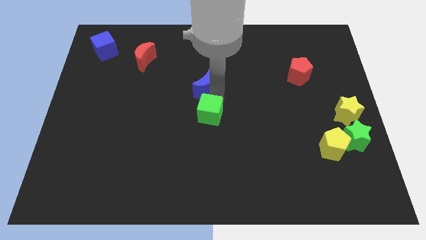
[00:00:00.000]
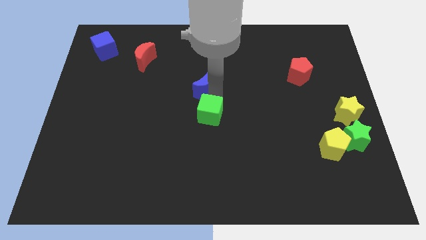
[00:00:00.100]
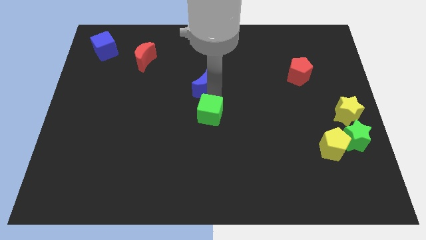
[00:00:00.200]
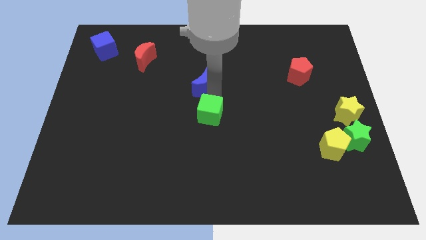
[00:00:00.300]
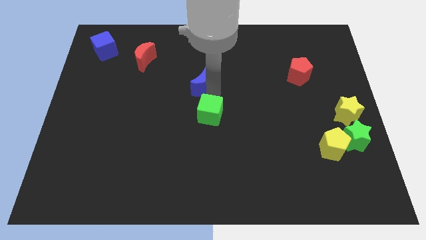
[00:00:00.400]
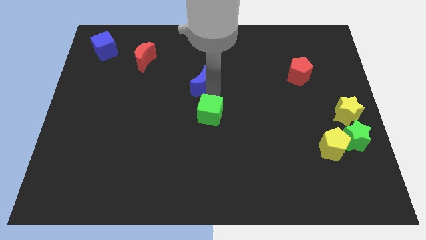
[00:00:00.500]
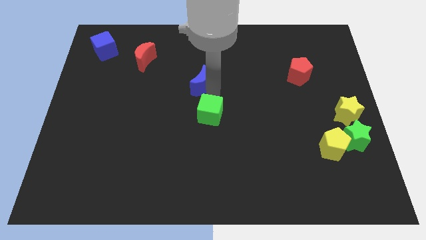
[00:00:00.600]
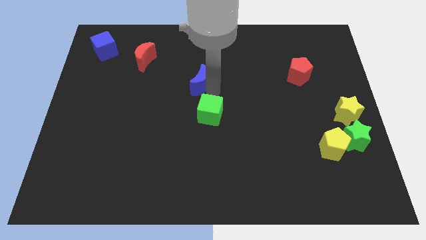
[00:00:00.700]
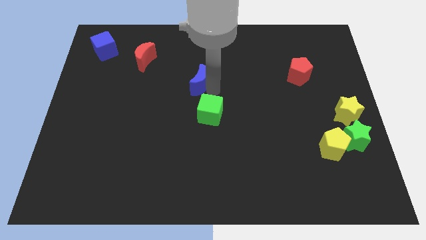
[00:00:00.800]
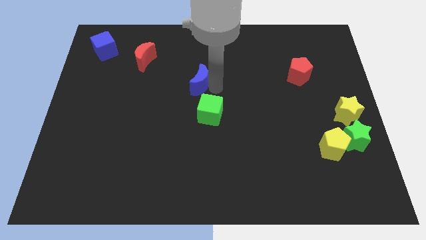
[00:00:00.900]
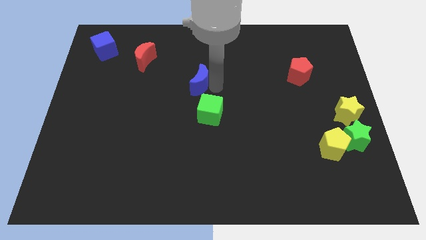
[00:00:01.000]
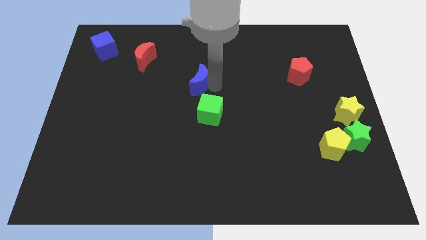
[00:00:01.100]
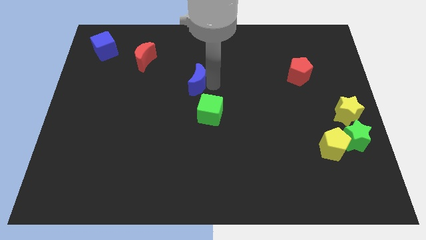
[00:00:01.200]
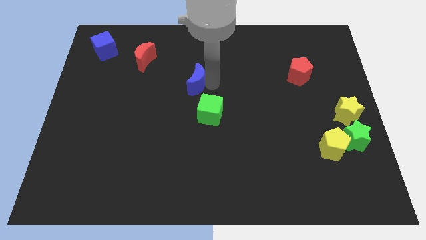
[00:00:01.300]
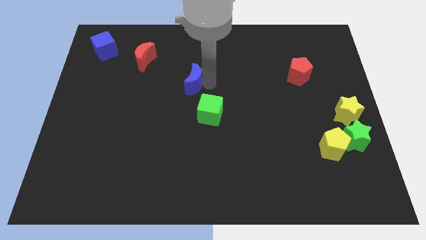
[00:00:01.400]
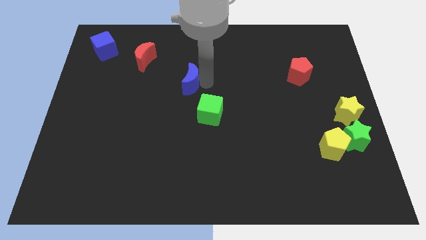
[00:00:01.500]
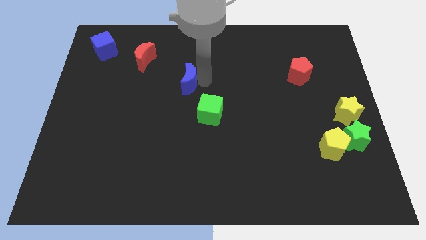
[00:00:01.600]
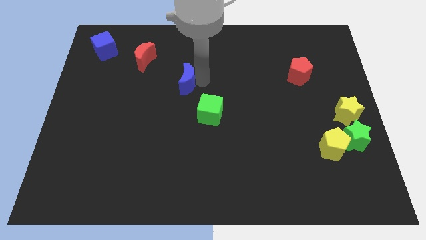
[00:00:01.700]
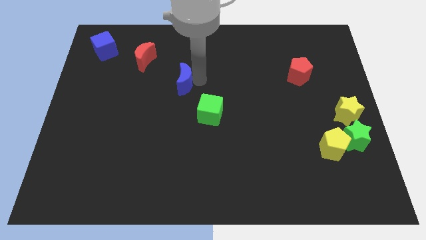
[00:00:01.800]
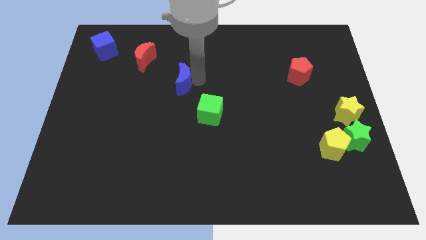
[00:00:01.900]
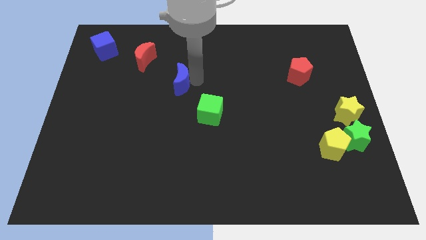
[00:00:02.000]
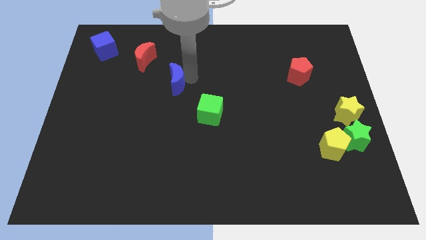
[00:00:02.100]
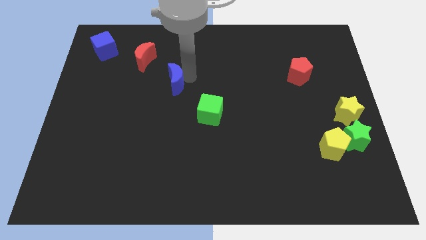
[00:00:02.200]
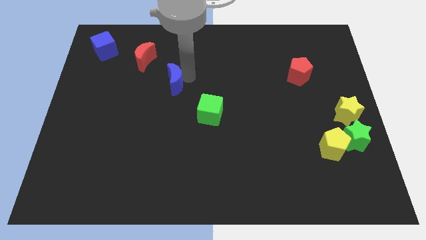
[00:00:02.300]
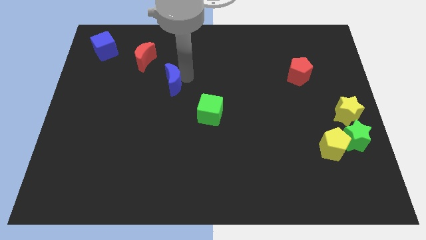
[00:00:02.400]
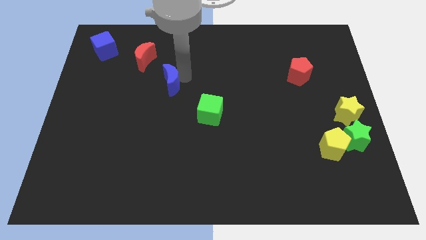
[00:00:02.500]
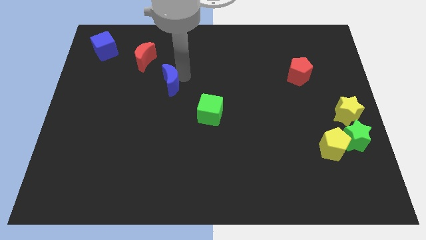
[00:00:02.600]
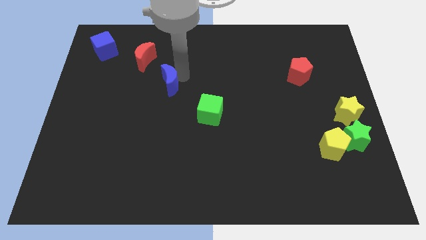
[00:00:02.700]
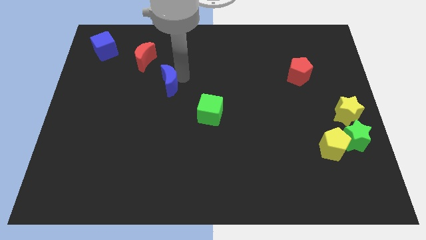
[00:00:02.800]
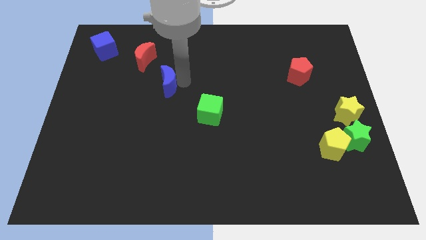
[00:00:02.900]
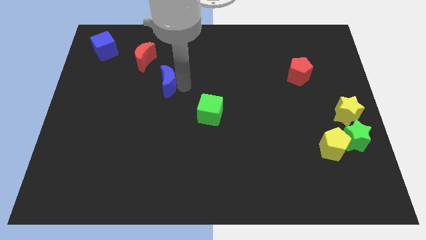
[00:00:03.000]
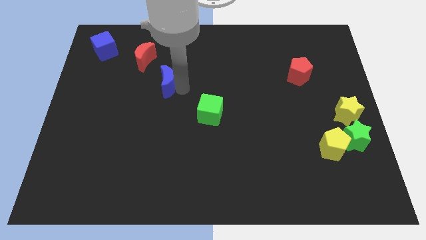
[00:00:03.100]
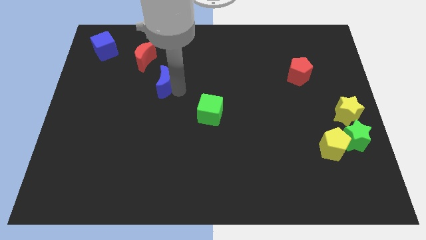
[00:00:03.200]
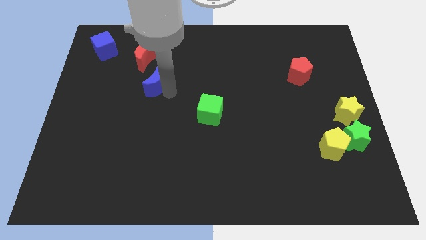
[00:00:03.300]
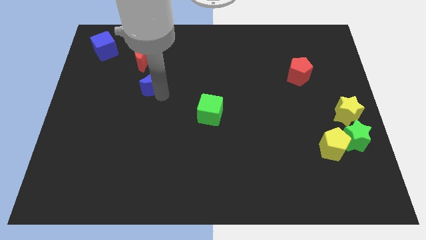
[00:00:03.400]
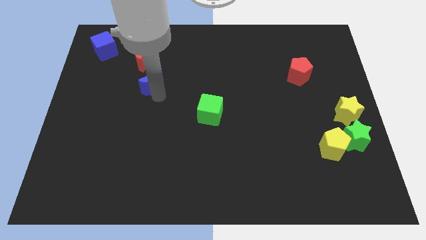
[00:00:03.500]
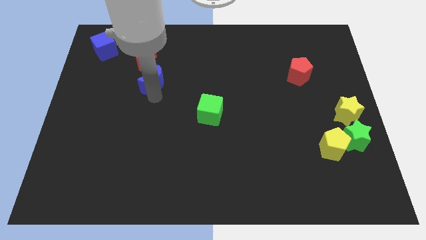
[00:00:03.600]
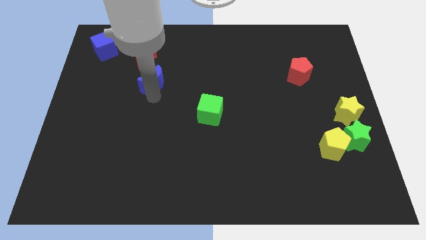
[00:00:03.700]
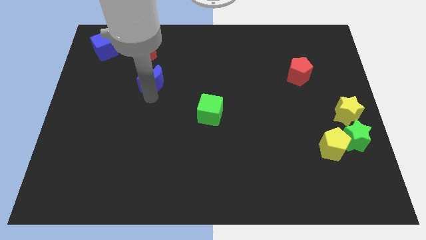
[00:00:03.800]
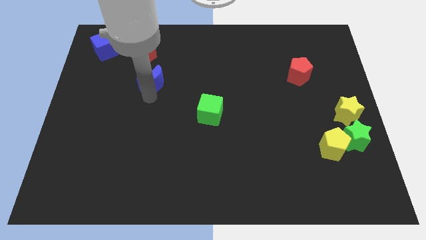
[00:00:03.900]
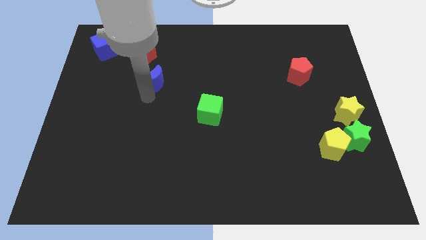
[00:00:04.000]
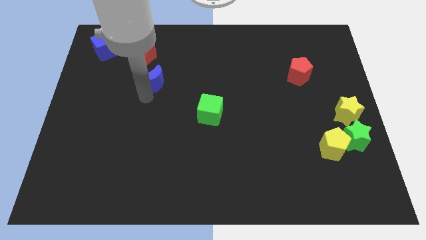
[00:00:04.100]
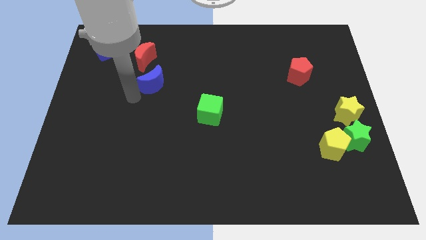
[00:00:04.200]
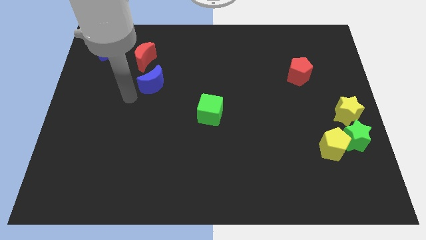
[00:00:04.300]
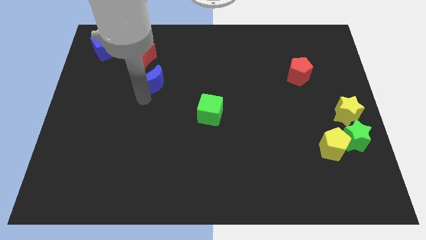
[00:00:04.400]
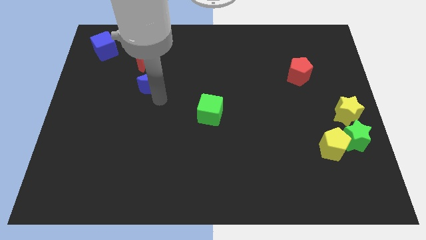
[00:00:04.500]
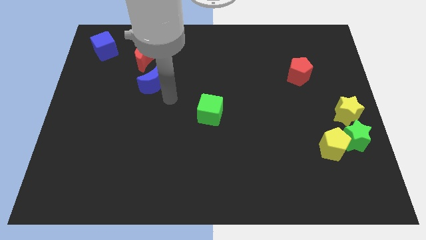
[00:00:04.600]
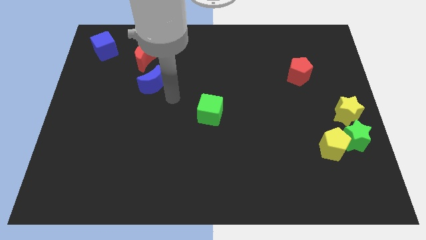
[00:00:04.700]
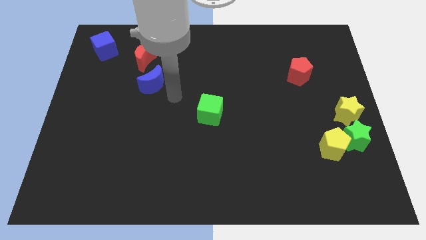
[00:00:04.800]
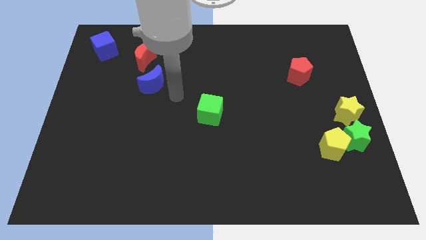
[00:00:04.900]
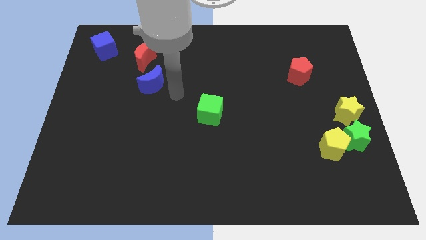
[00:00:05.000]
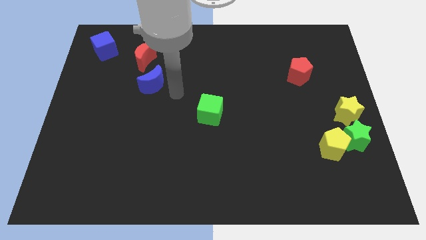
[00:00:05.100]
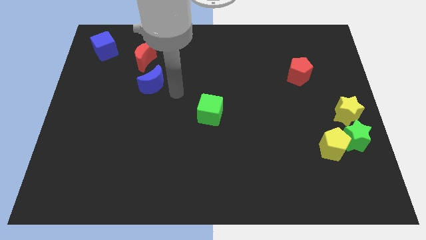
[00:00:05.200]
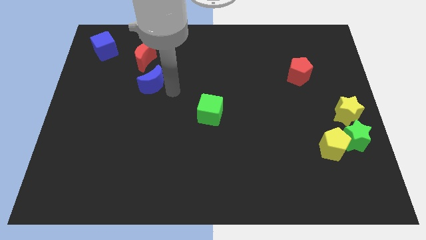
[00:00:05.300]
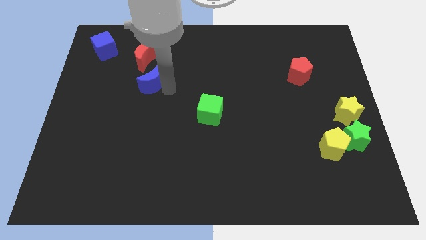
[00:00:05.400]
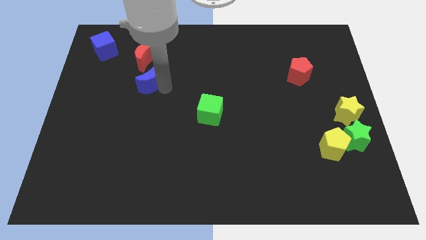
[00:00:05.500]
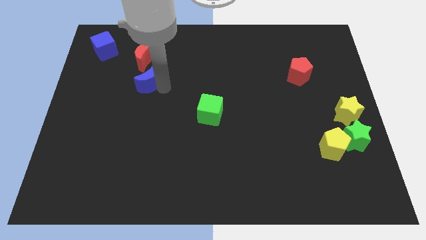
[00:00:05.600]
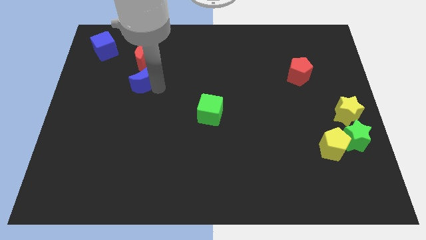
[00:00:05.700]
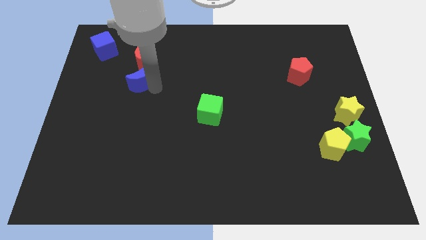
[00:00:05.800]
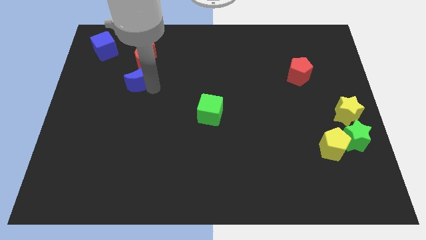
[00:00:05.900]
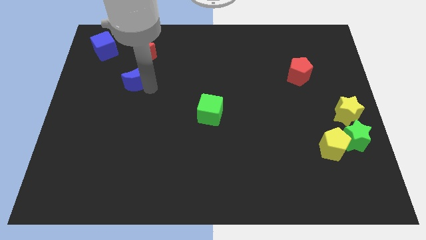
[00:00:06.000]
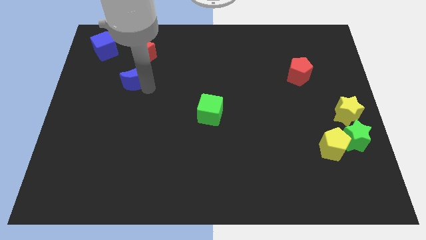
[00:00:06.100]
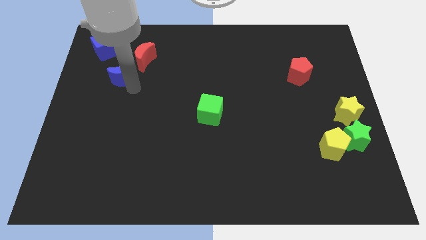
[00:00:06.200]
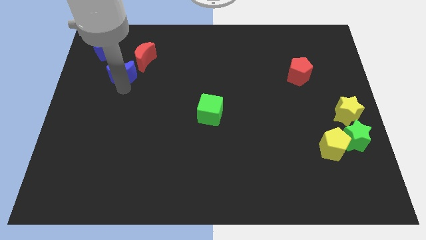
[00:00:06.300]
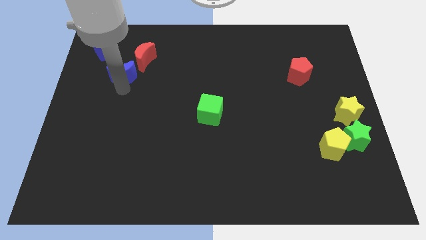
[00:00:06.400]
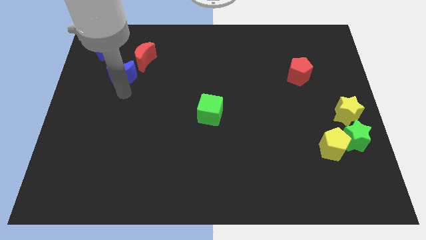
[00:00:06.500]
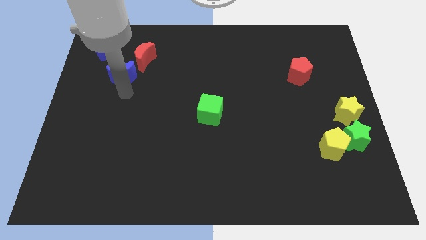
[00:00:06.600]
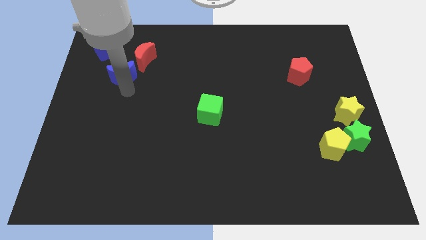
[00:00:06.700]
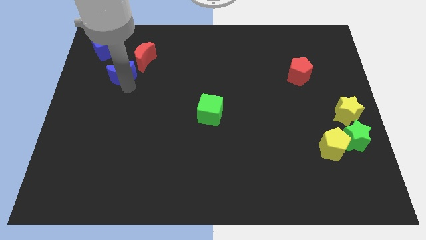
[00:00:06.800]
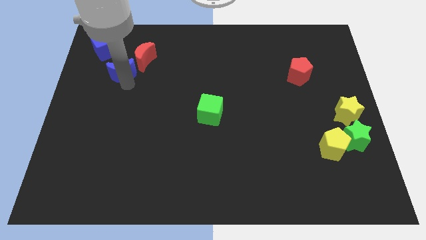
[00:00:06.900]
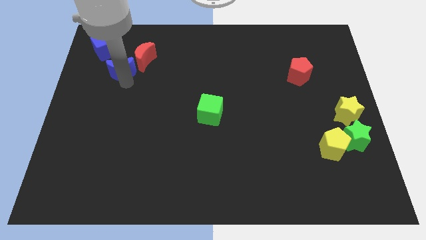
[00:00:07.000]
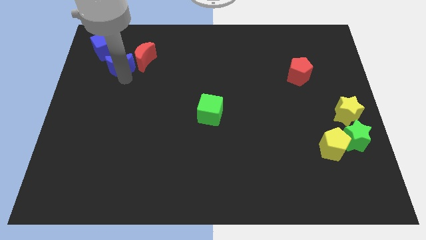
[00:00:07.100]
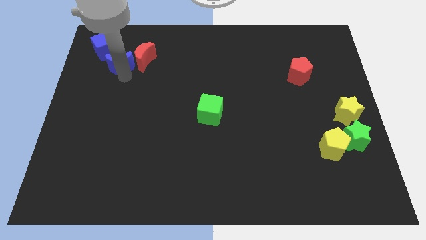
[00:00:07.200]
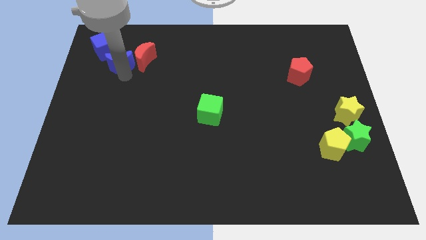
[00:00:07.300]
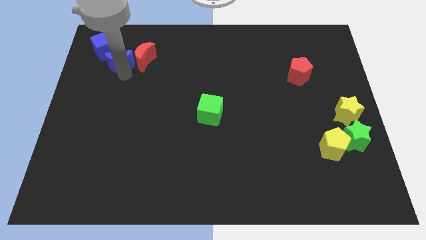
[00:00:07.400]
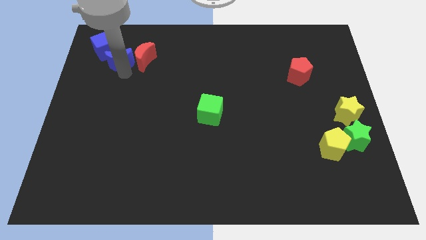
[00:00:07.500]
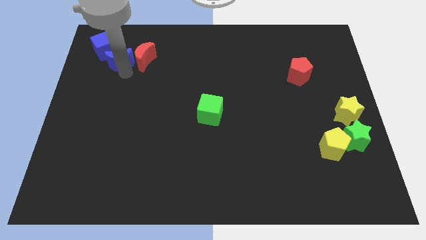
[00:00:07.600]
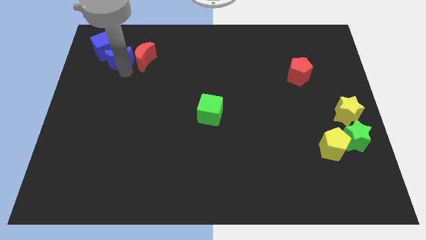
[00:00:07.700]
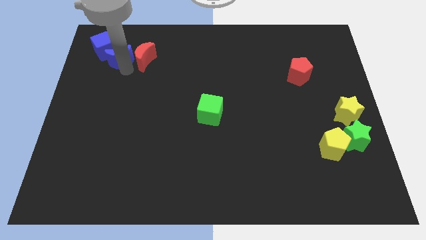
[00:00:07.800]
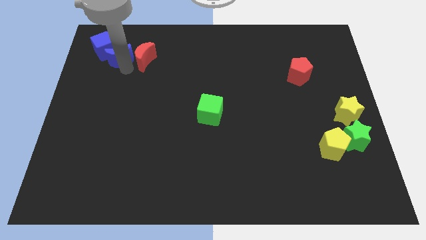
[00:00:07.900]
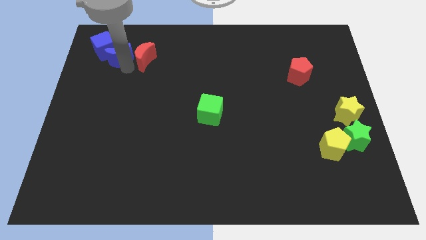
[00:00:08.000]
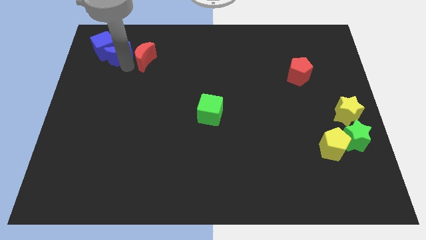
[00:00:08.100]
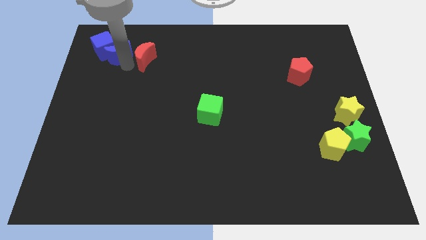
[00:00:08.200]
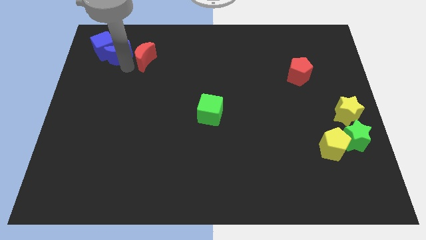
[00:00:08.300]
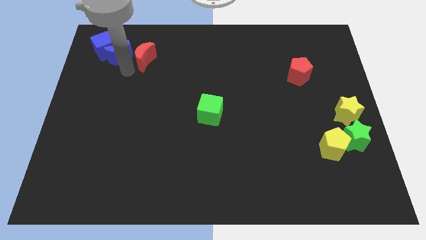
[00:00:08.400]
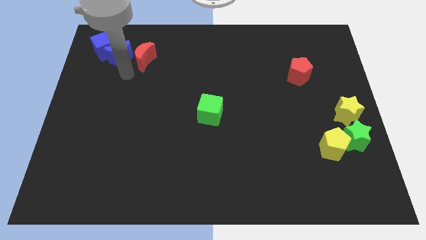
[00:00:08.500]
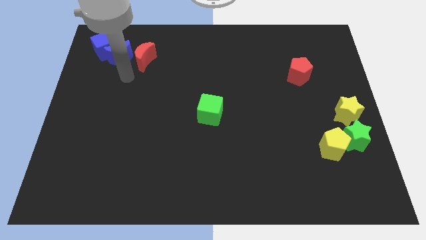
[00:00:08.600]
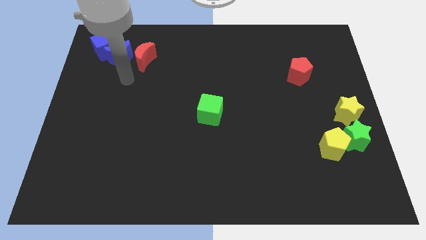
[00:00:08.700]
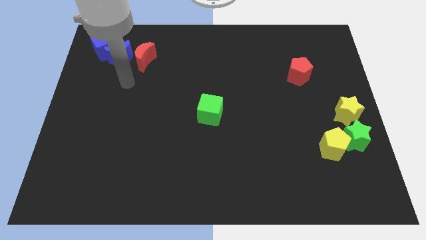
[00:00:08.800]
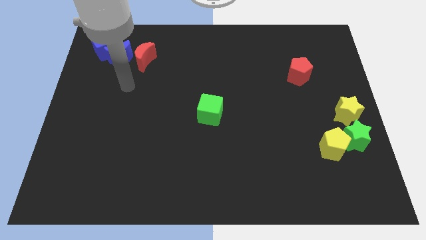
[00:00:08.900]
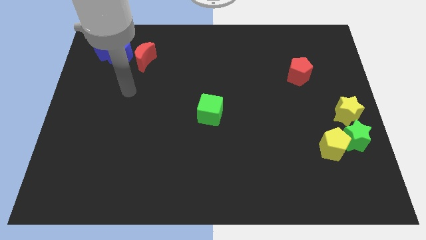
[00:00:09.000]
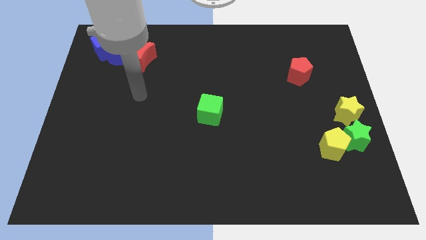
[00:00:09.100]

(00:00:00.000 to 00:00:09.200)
place the blue moon in between the red moon and blue cube
